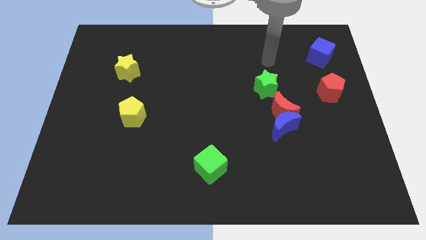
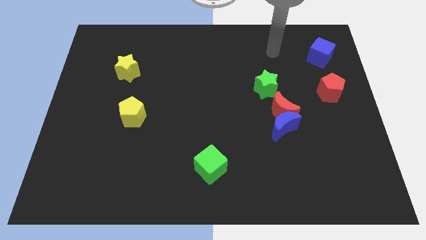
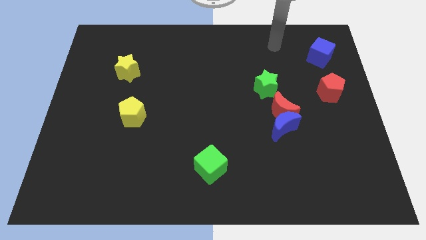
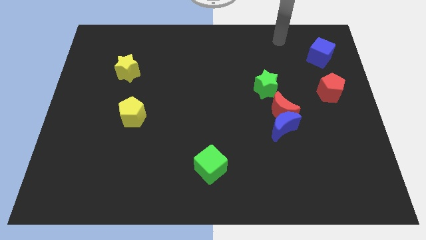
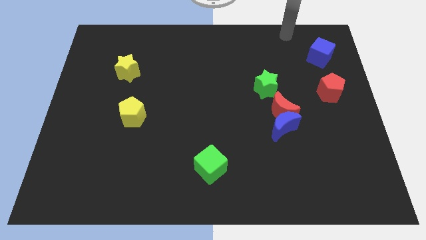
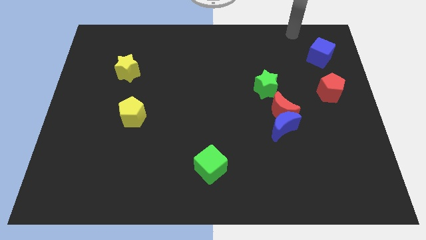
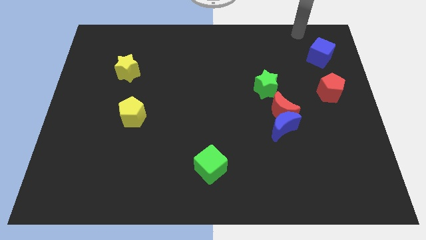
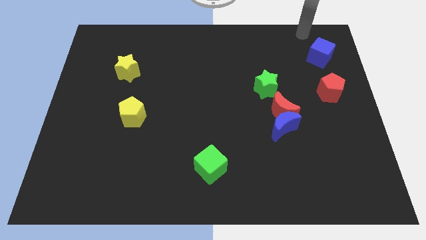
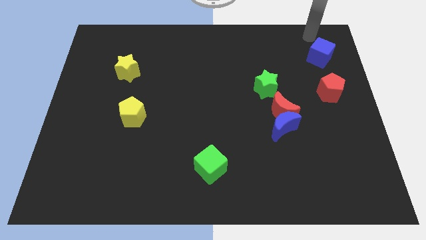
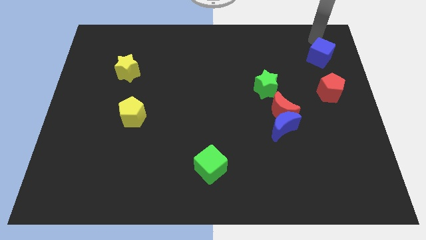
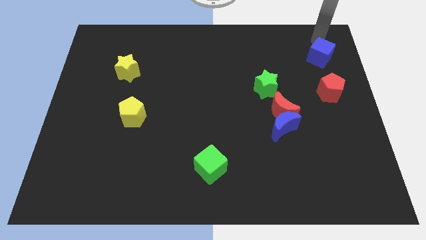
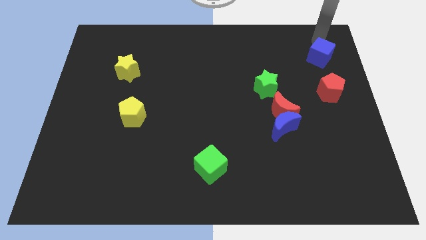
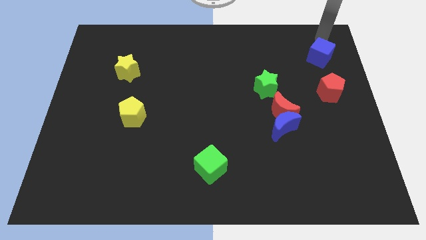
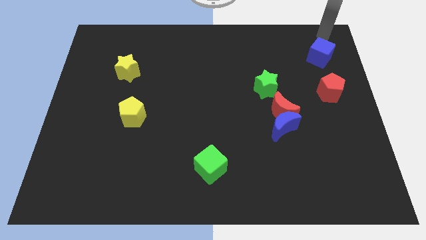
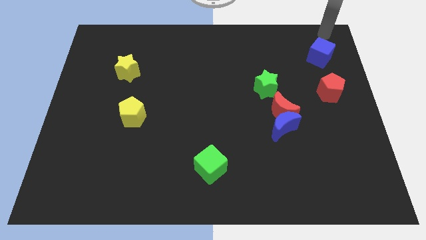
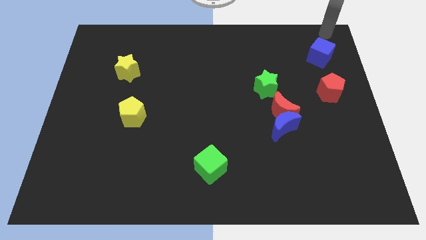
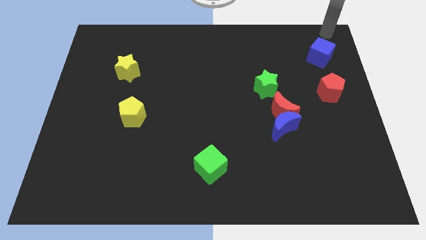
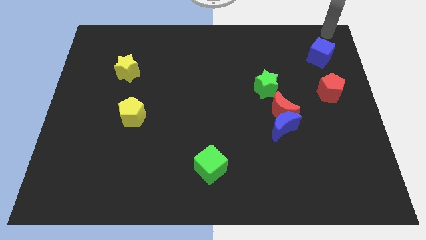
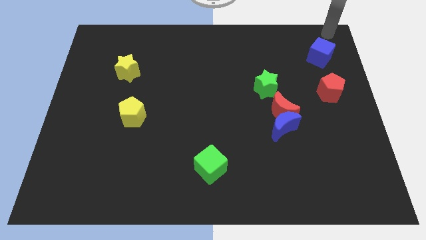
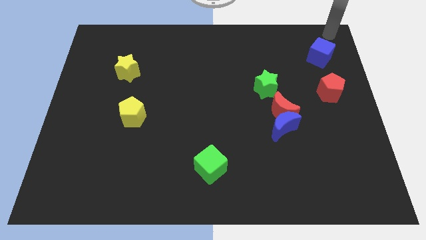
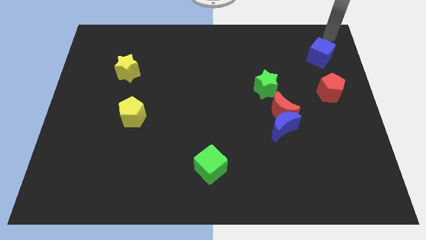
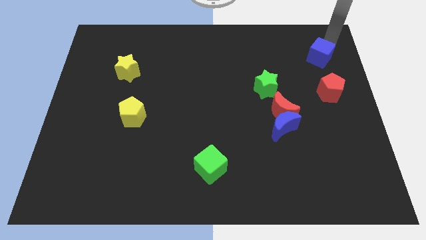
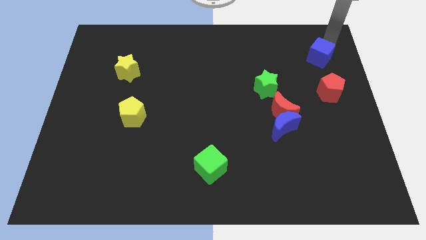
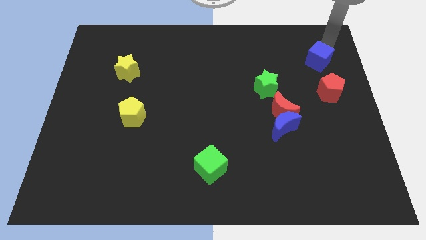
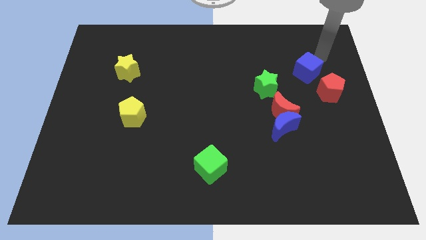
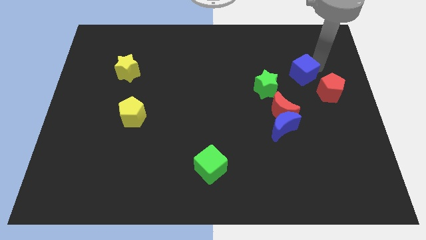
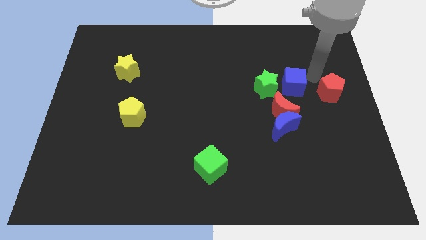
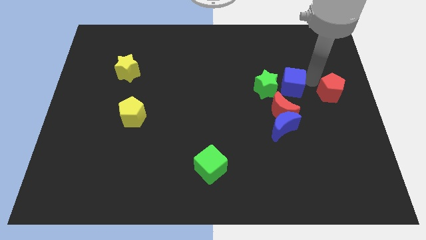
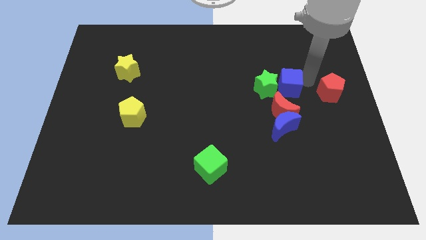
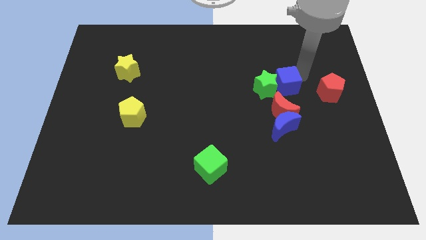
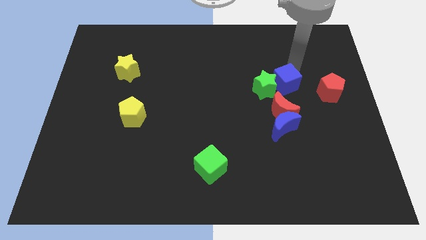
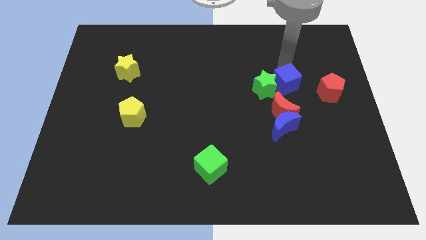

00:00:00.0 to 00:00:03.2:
push the blue cube to the right of the green star

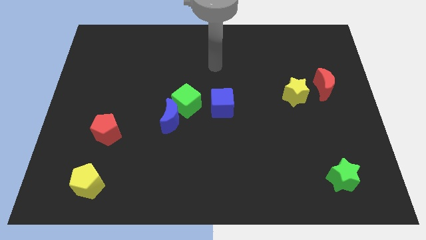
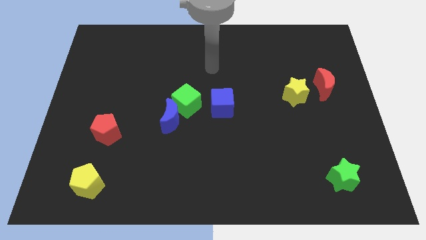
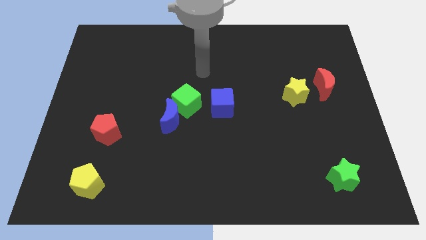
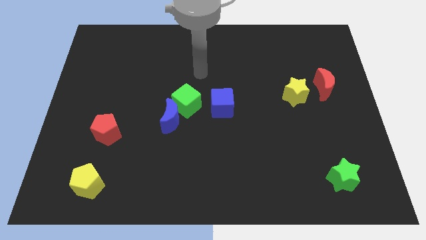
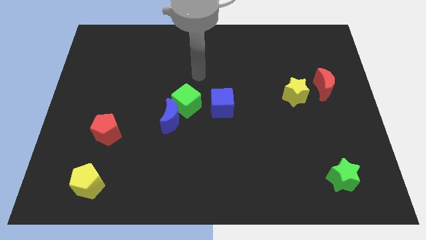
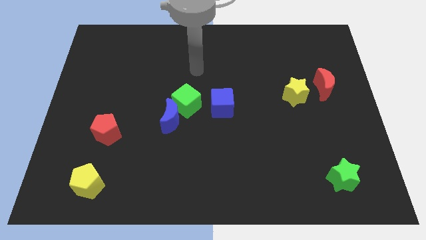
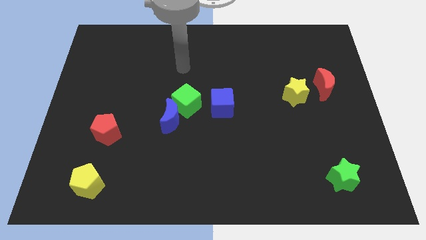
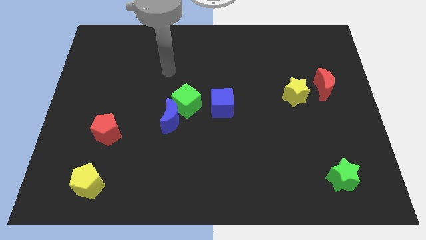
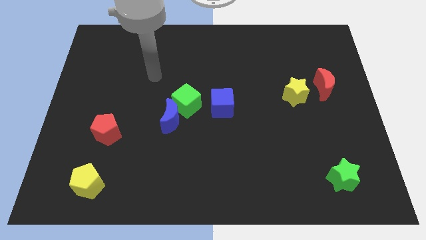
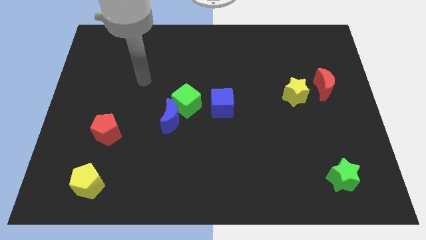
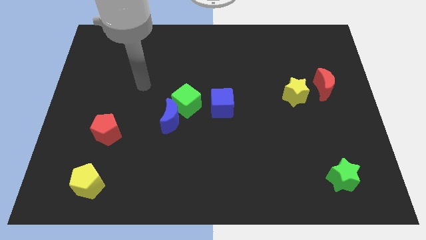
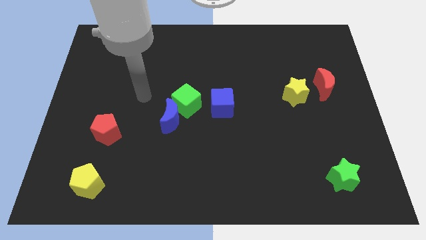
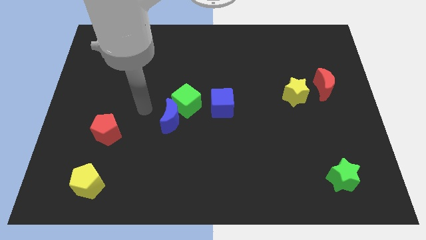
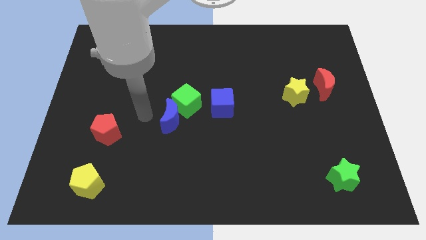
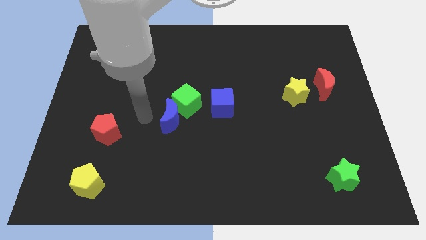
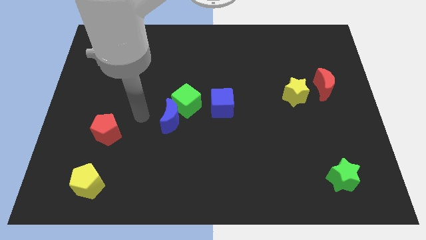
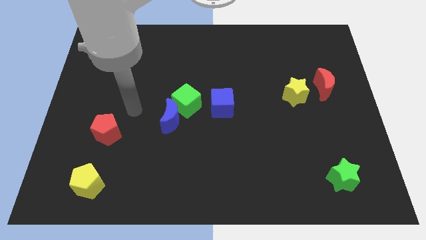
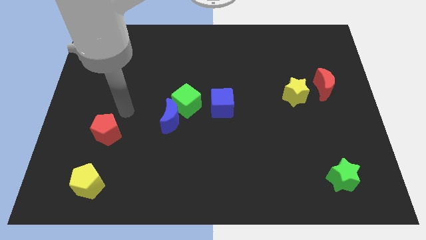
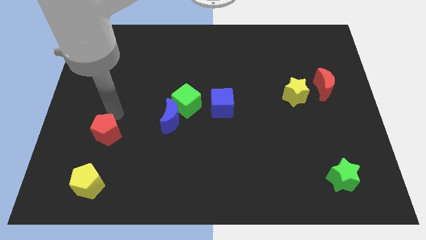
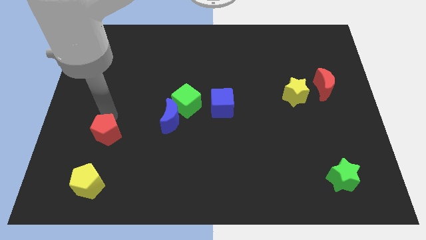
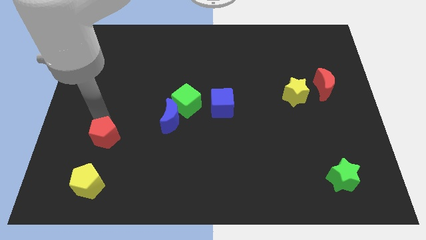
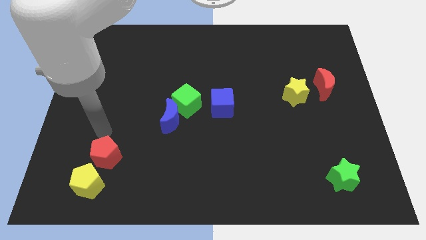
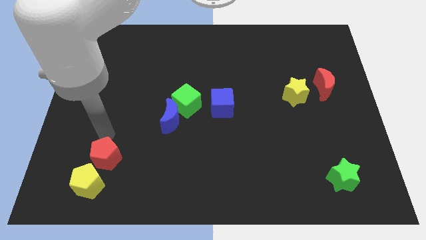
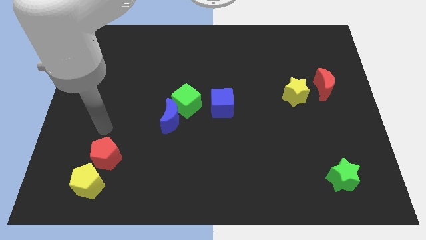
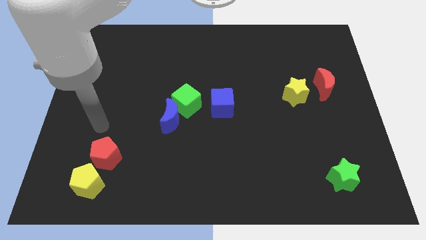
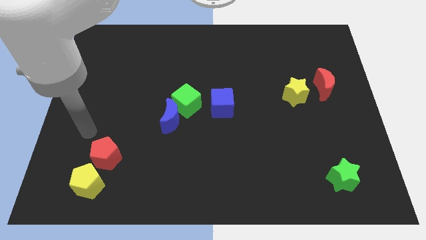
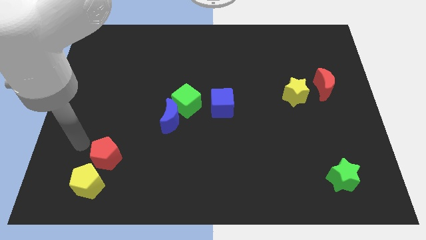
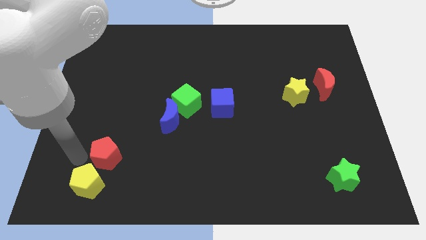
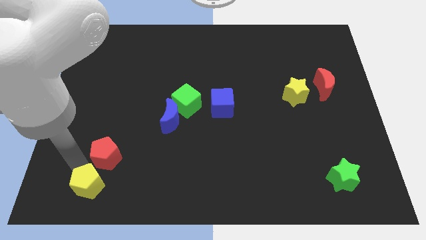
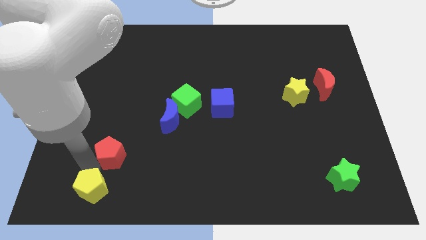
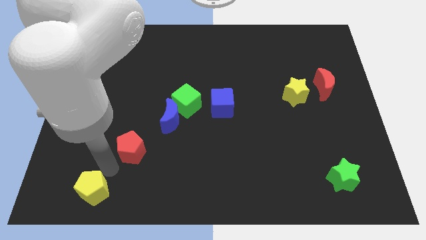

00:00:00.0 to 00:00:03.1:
place your arm in between yellow and red pentagons

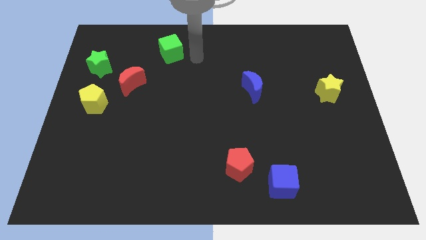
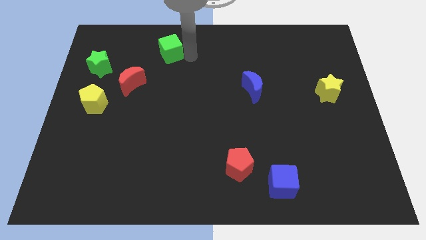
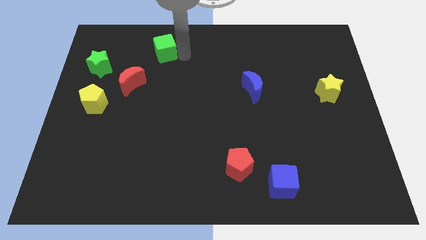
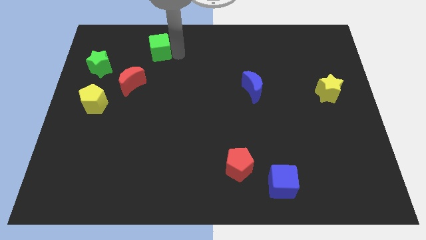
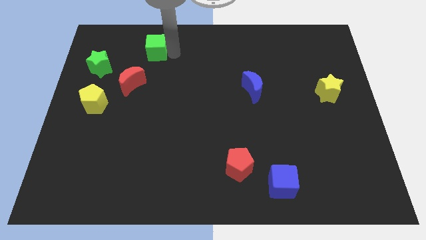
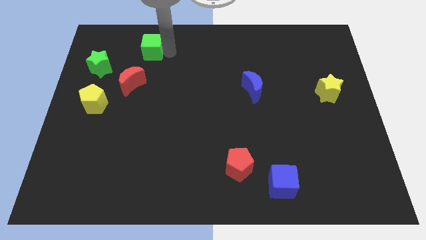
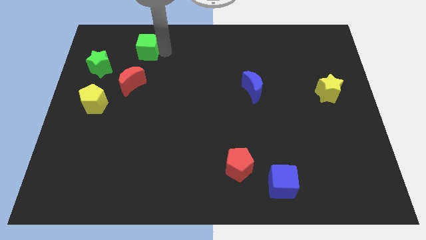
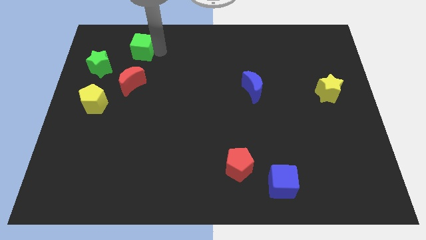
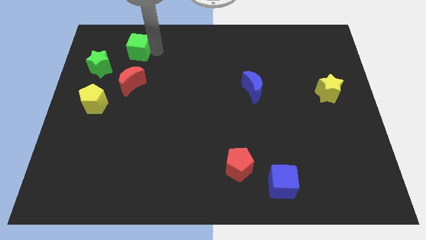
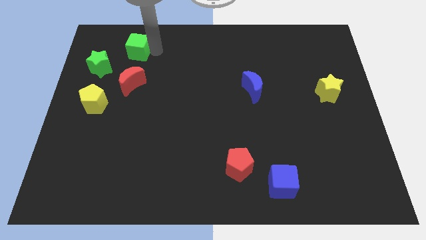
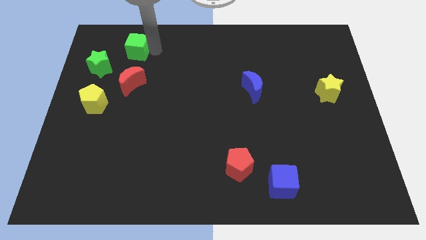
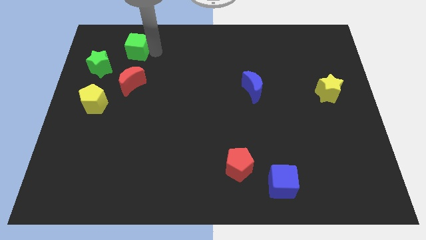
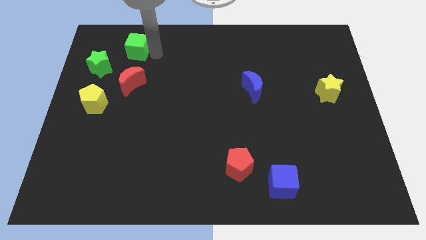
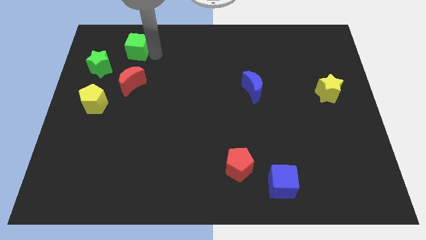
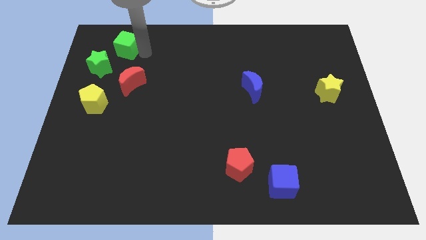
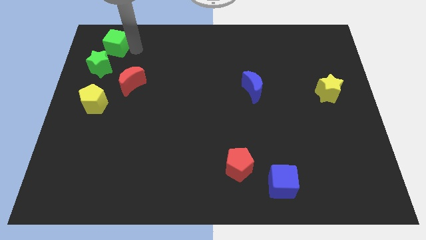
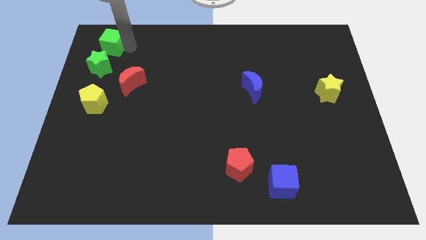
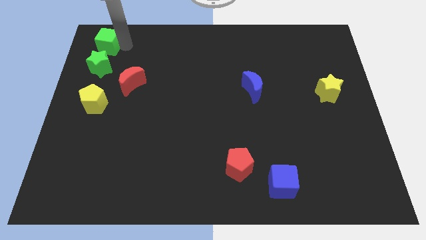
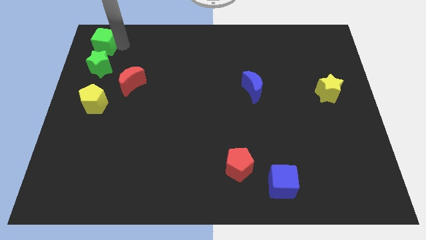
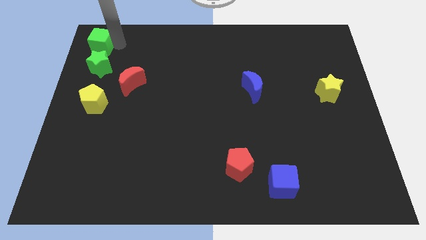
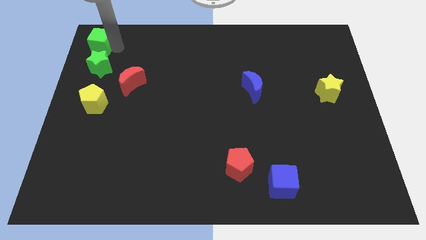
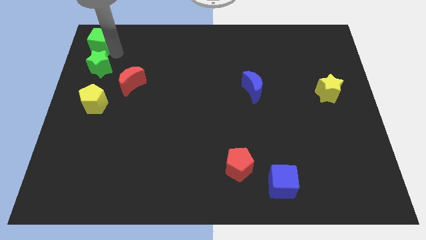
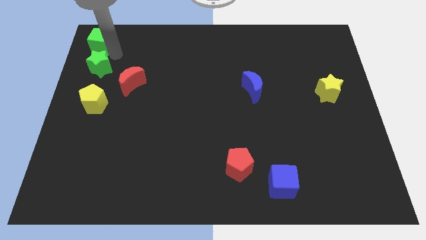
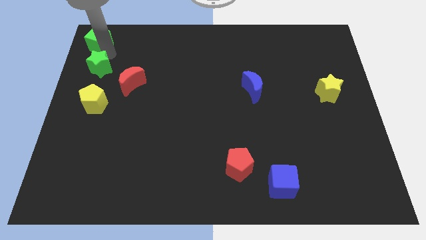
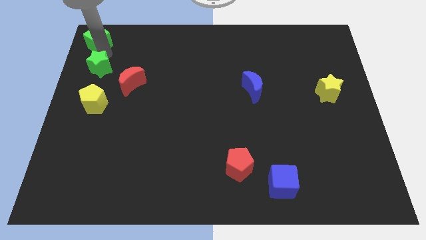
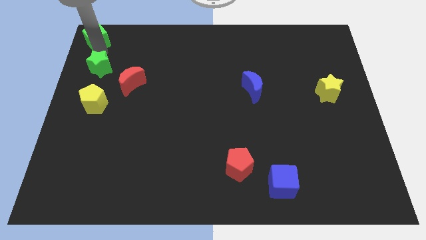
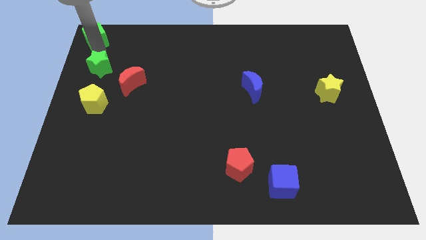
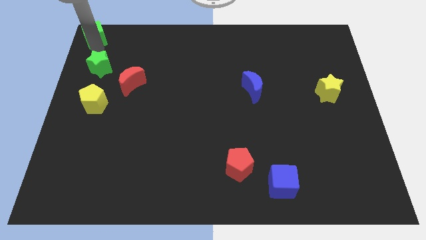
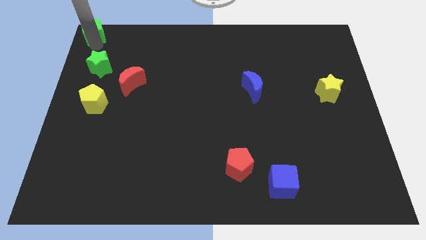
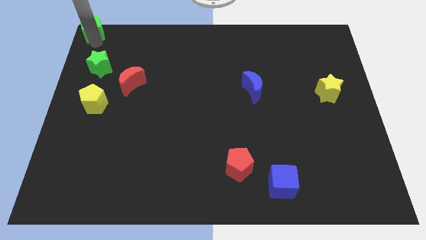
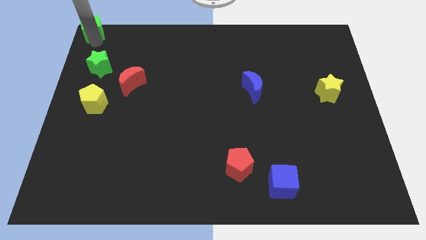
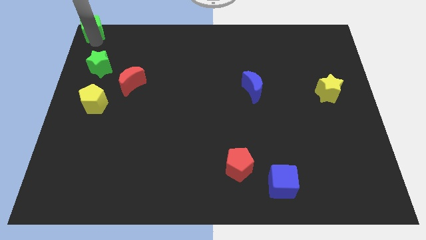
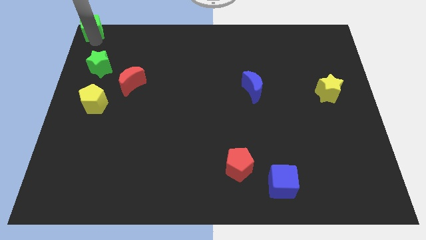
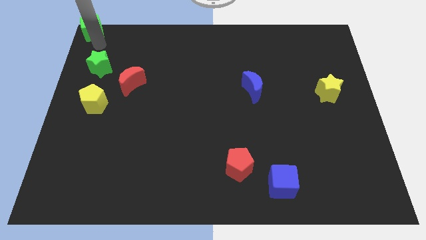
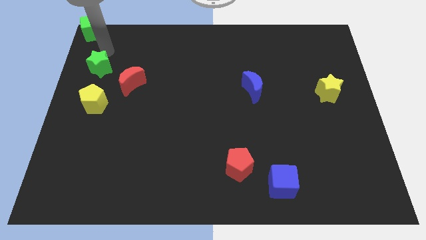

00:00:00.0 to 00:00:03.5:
place green cube on left top corner of the board
